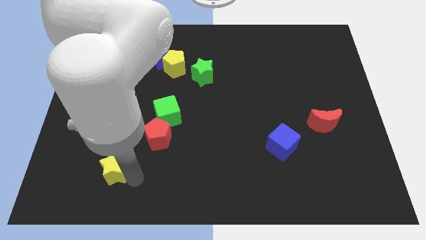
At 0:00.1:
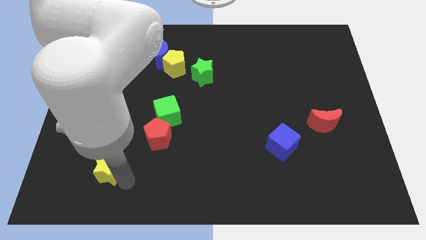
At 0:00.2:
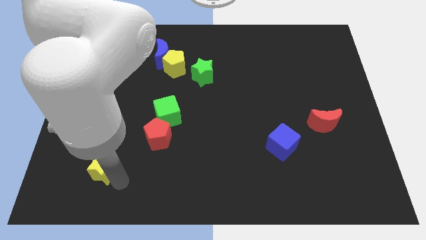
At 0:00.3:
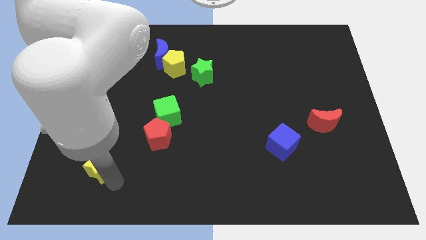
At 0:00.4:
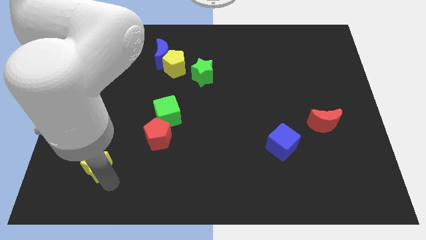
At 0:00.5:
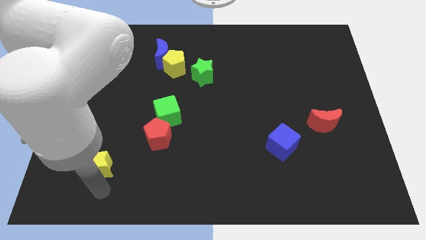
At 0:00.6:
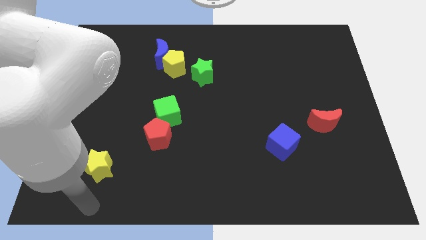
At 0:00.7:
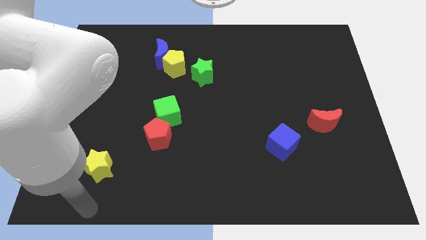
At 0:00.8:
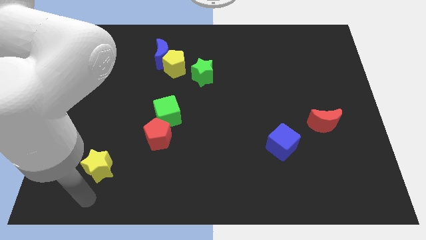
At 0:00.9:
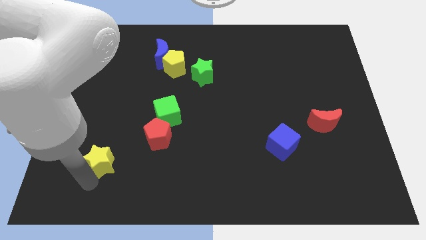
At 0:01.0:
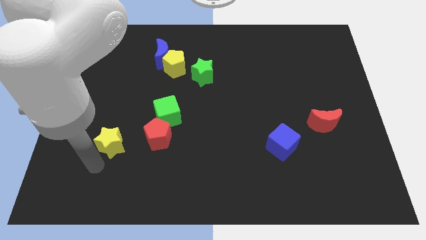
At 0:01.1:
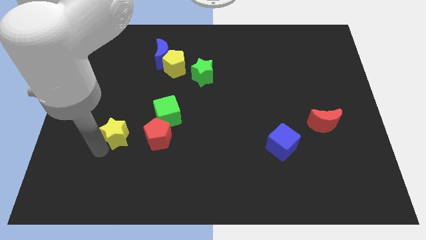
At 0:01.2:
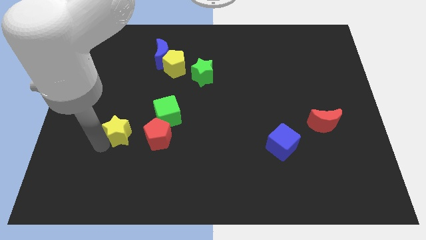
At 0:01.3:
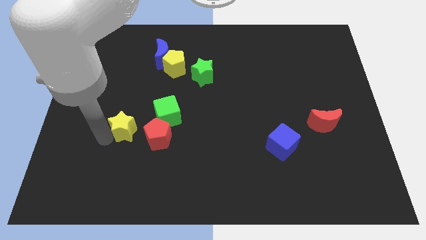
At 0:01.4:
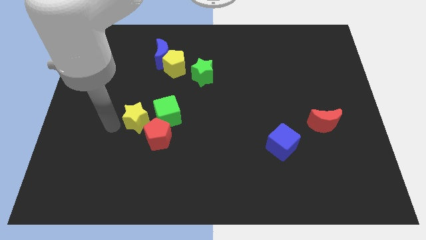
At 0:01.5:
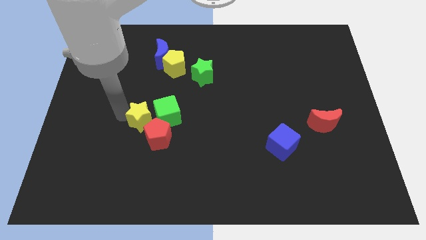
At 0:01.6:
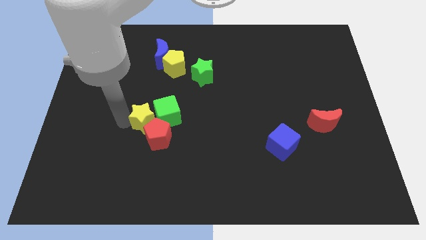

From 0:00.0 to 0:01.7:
place the yellow star close to the green block and red pentagon

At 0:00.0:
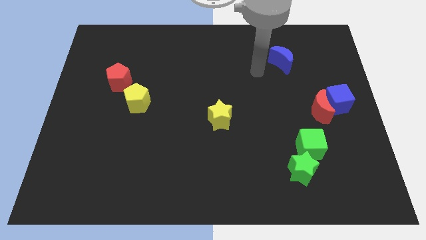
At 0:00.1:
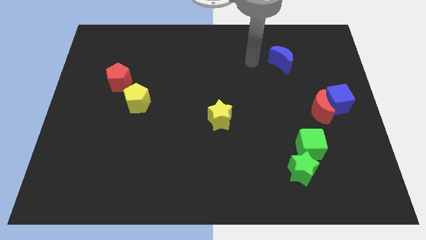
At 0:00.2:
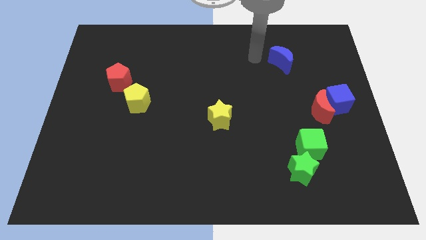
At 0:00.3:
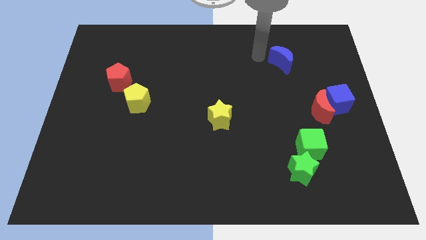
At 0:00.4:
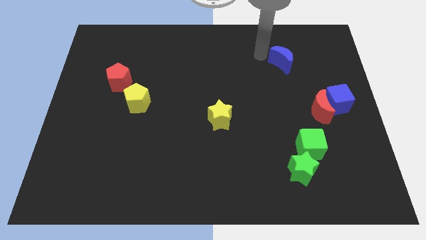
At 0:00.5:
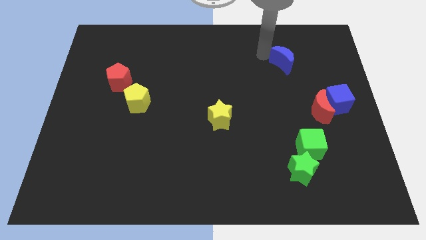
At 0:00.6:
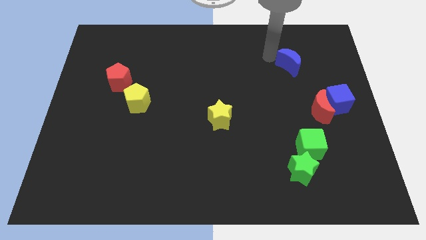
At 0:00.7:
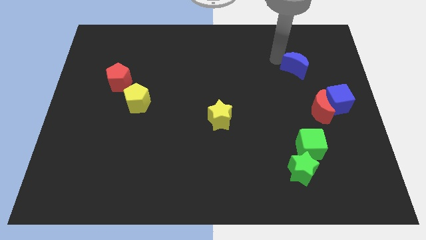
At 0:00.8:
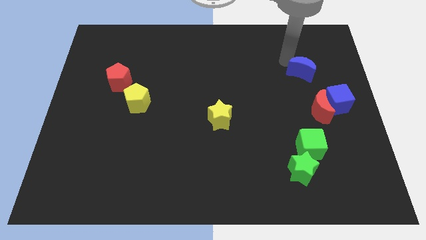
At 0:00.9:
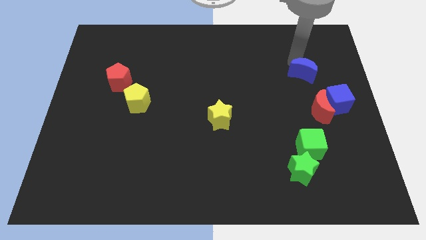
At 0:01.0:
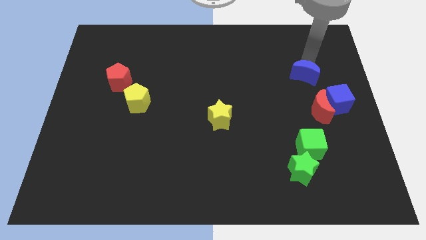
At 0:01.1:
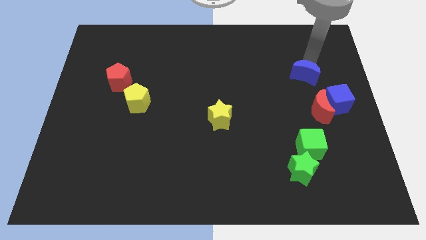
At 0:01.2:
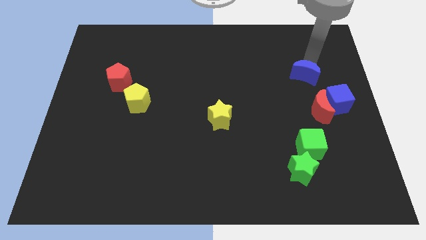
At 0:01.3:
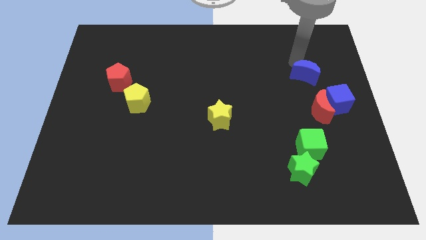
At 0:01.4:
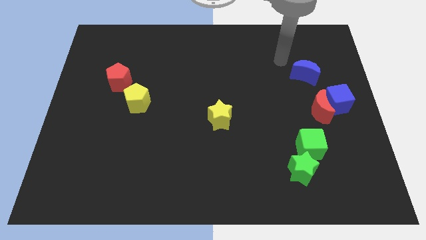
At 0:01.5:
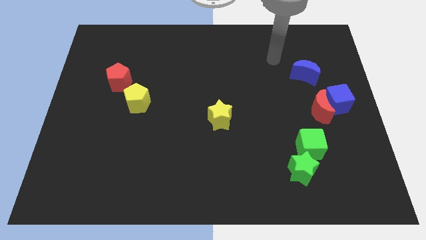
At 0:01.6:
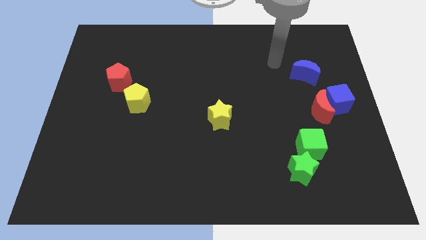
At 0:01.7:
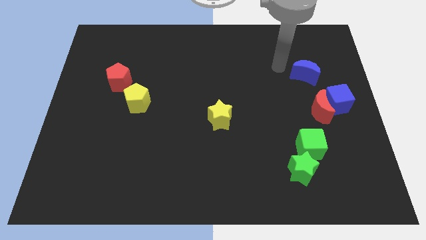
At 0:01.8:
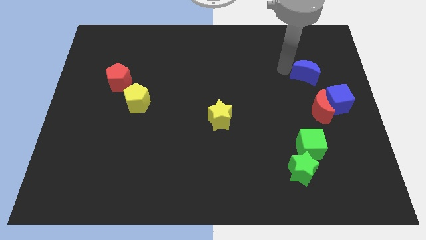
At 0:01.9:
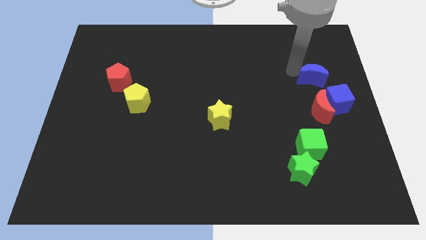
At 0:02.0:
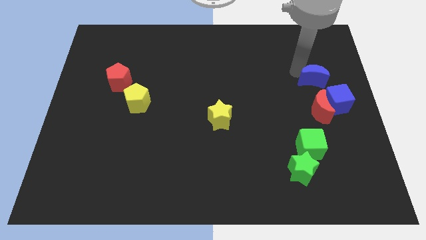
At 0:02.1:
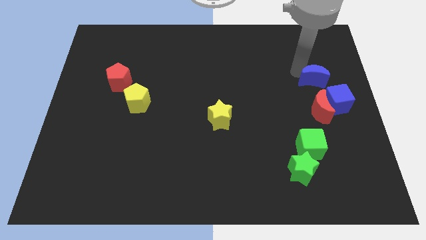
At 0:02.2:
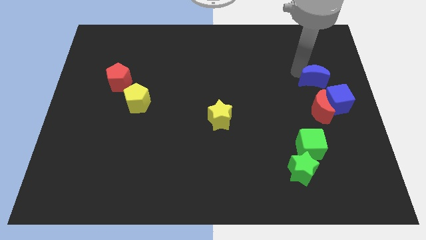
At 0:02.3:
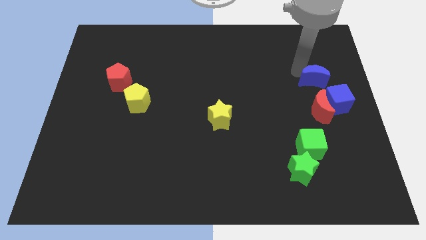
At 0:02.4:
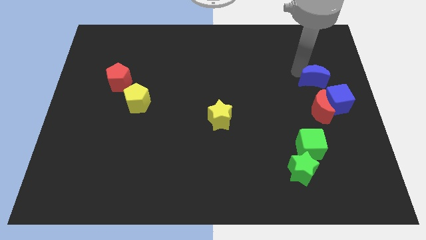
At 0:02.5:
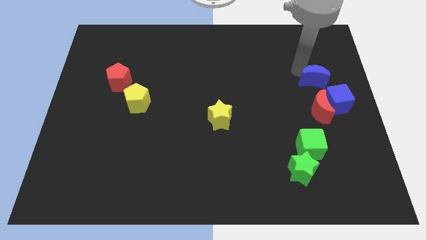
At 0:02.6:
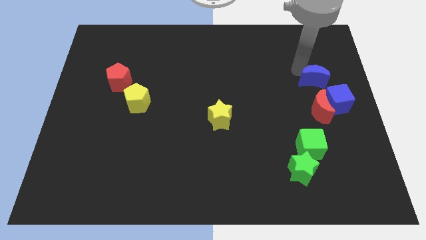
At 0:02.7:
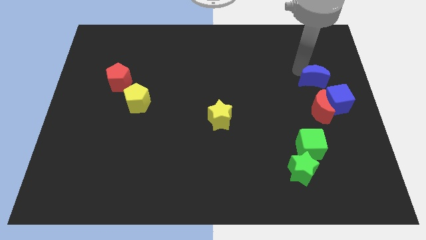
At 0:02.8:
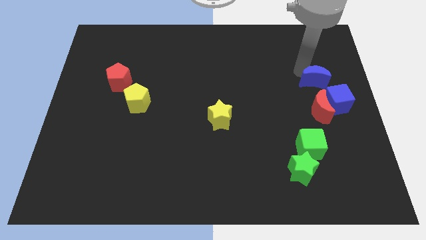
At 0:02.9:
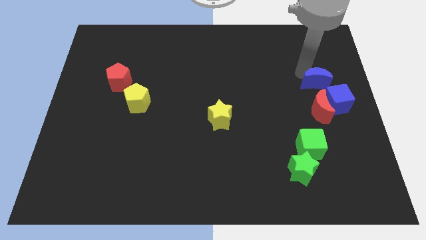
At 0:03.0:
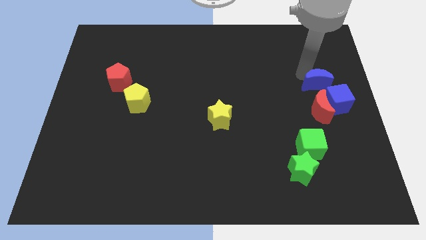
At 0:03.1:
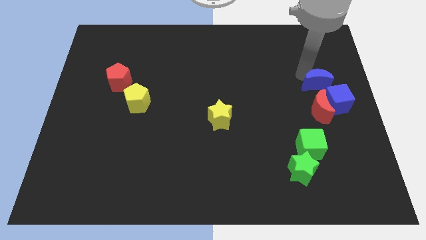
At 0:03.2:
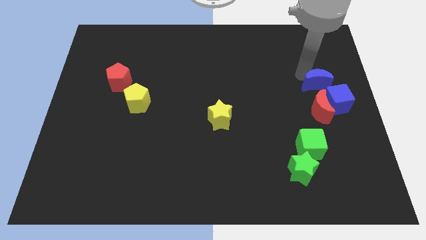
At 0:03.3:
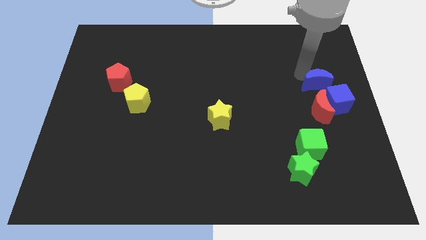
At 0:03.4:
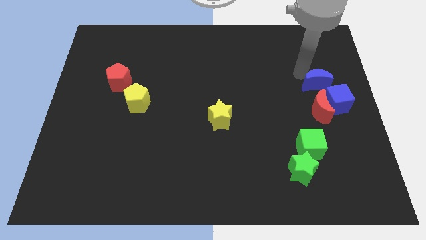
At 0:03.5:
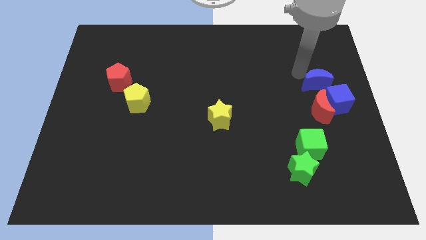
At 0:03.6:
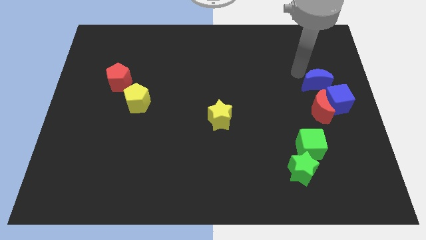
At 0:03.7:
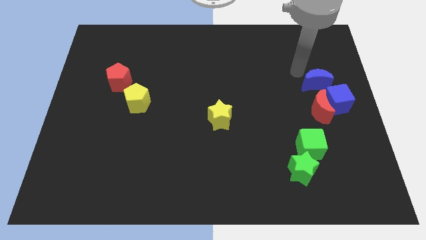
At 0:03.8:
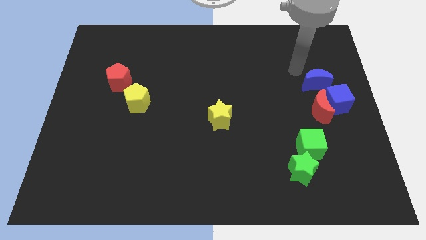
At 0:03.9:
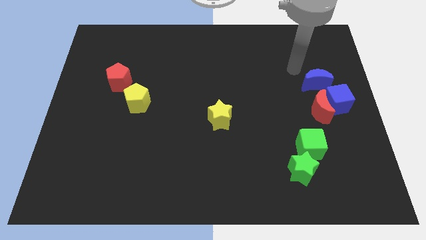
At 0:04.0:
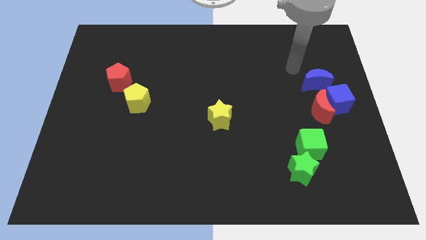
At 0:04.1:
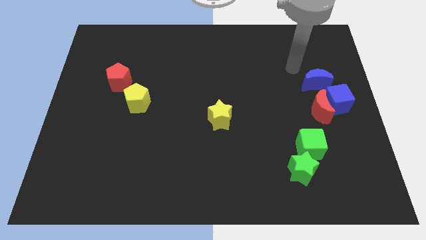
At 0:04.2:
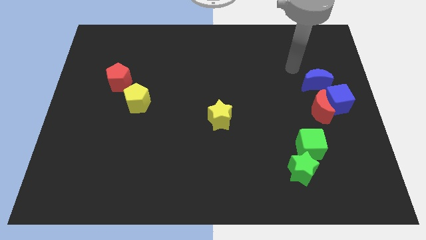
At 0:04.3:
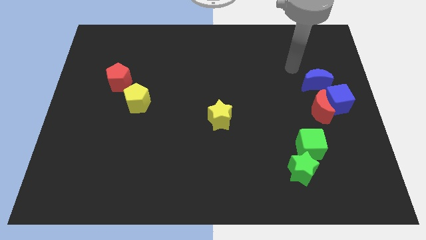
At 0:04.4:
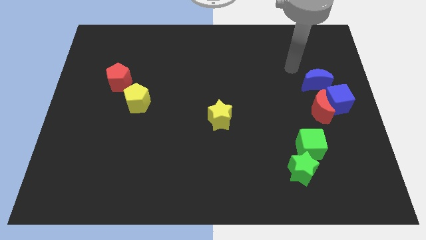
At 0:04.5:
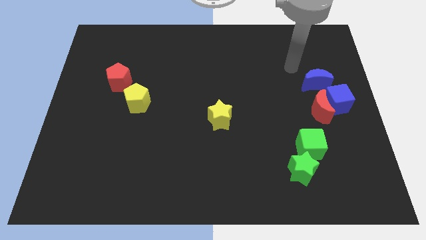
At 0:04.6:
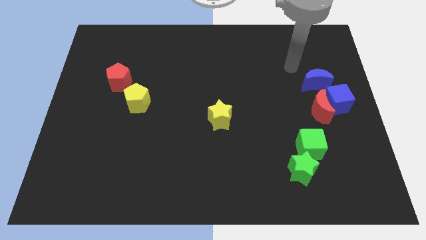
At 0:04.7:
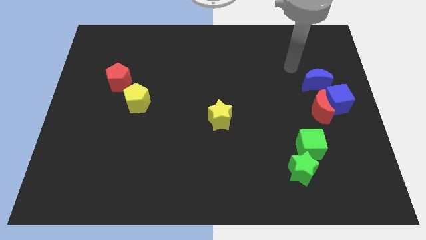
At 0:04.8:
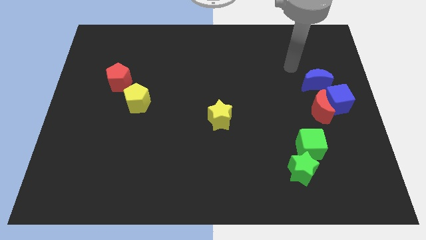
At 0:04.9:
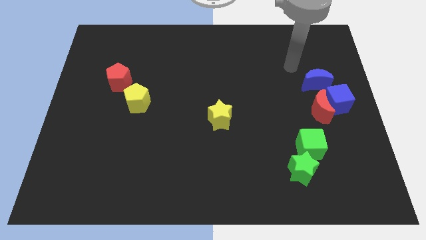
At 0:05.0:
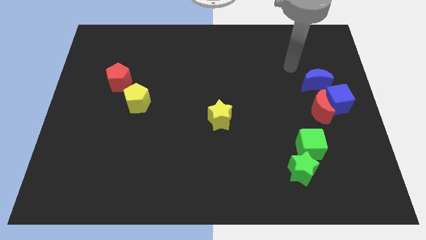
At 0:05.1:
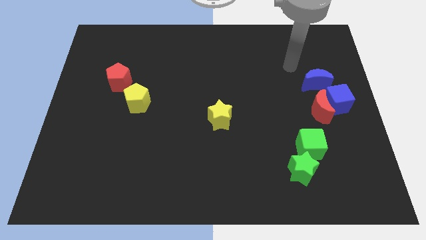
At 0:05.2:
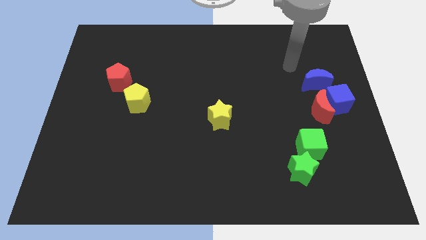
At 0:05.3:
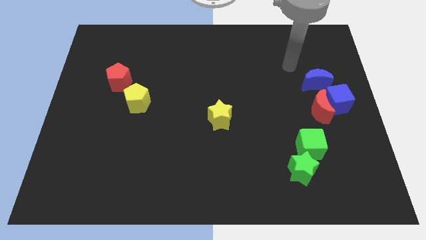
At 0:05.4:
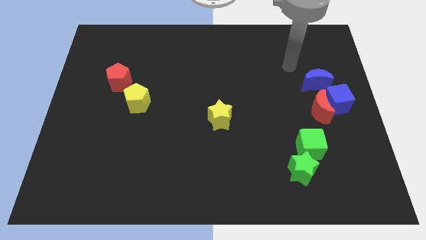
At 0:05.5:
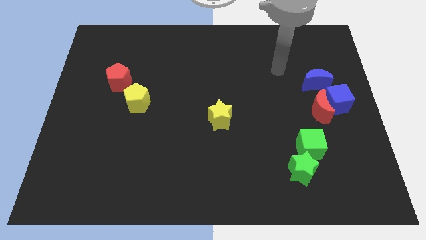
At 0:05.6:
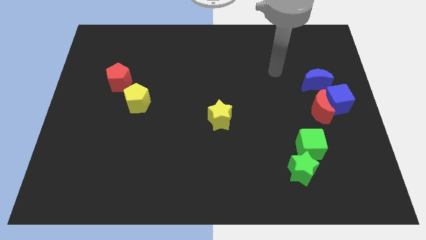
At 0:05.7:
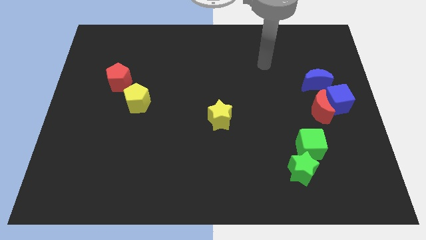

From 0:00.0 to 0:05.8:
move the blue crescent above to the red crescent

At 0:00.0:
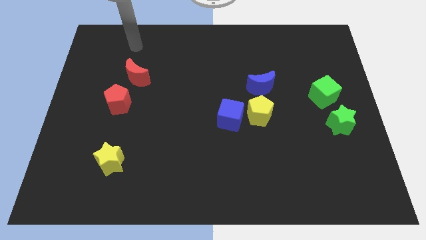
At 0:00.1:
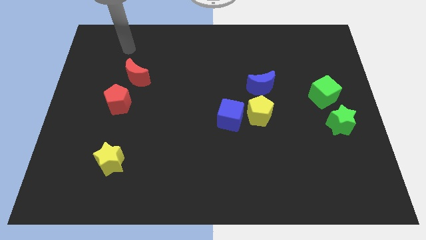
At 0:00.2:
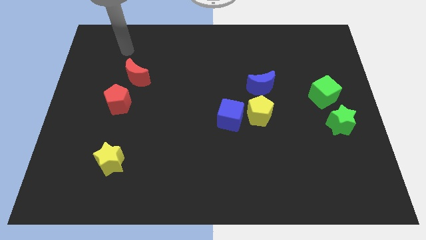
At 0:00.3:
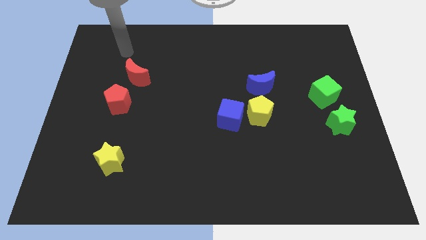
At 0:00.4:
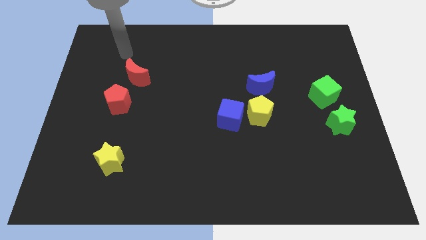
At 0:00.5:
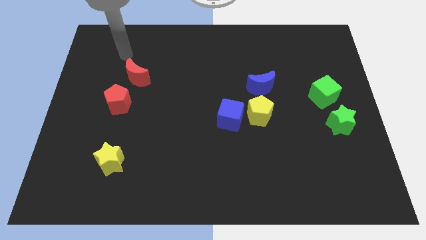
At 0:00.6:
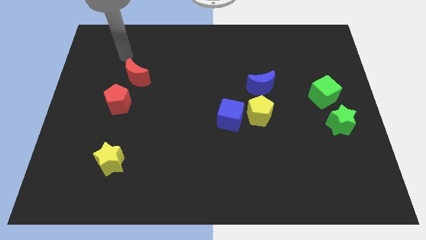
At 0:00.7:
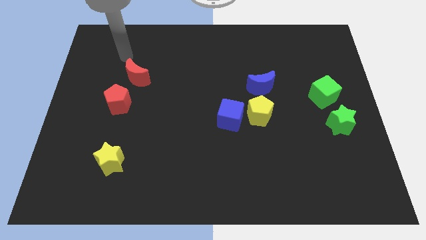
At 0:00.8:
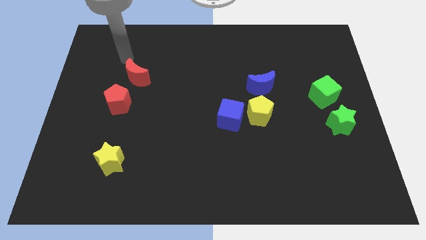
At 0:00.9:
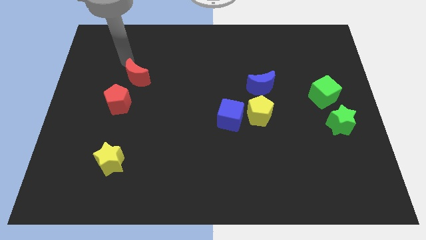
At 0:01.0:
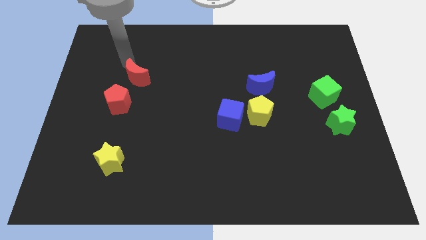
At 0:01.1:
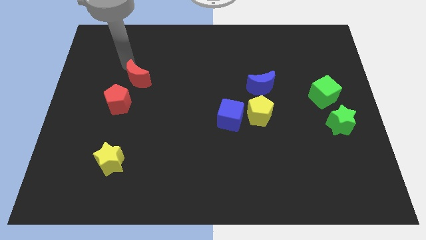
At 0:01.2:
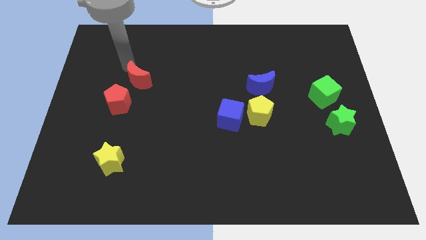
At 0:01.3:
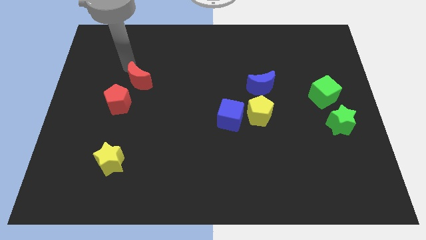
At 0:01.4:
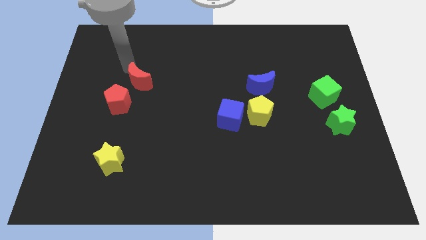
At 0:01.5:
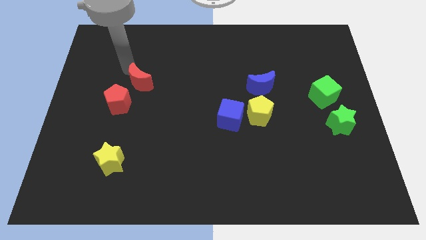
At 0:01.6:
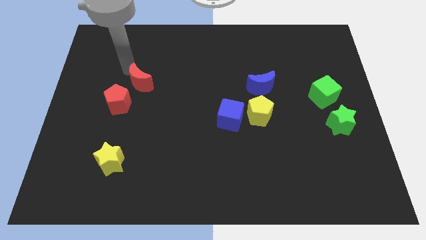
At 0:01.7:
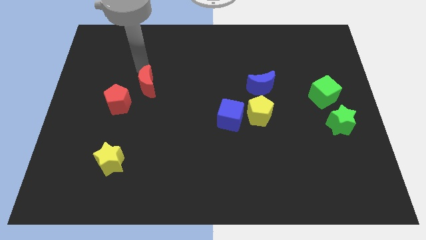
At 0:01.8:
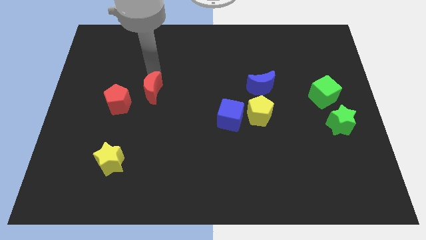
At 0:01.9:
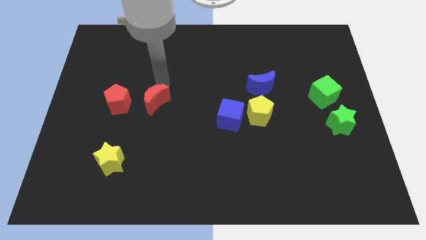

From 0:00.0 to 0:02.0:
push the red crescent right to the red pentagon
